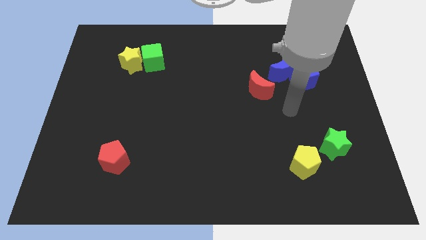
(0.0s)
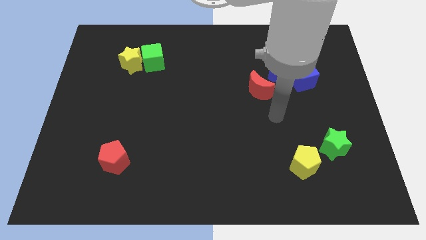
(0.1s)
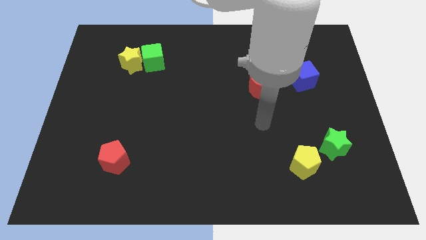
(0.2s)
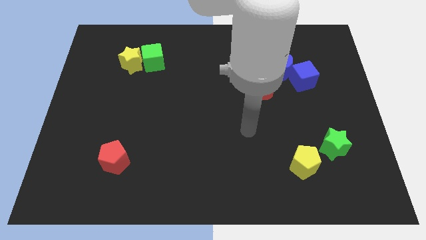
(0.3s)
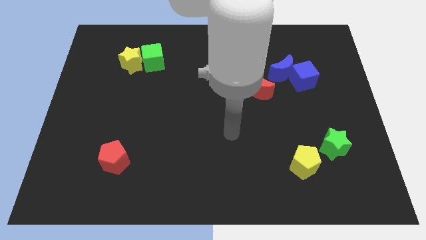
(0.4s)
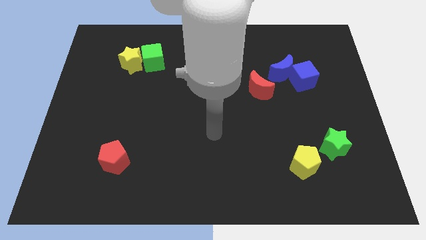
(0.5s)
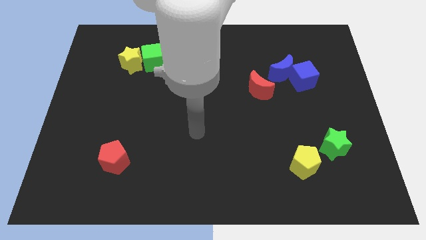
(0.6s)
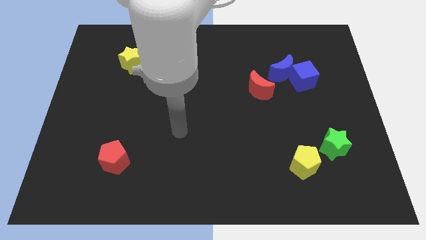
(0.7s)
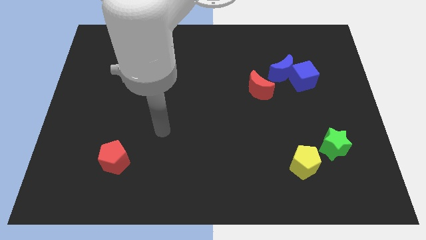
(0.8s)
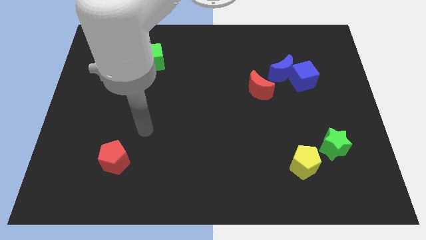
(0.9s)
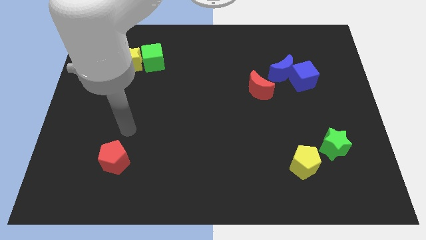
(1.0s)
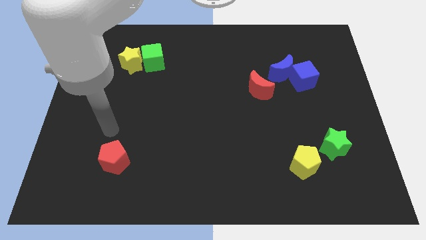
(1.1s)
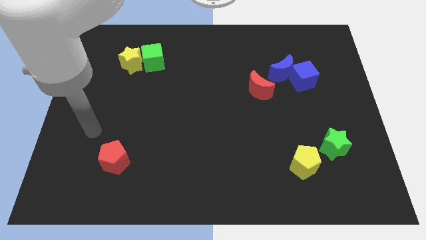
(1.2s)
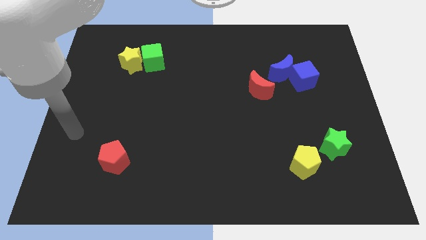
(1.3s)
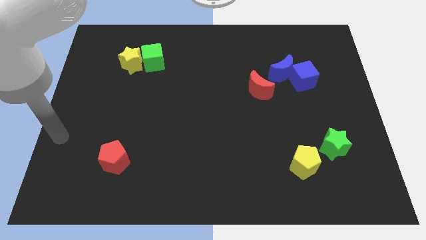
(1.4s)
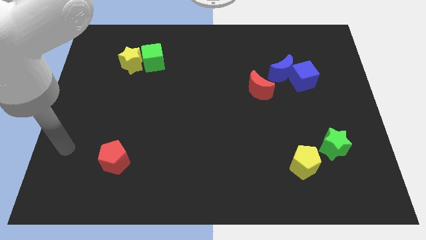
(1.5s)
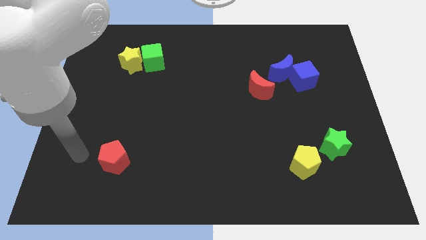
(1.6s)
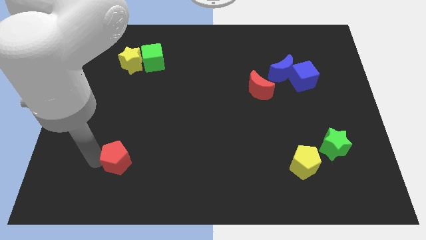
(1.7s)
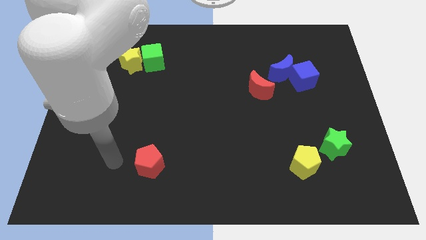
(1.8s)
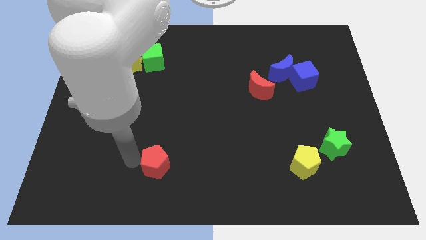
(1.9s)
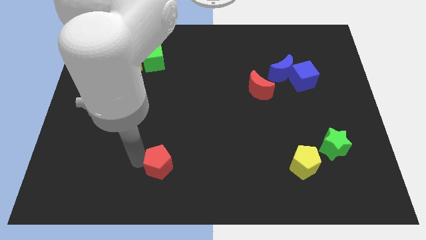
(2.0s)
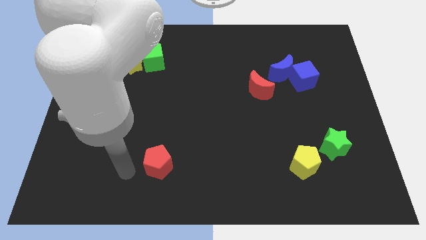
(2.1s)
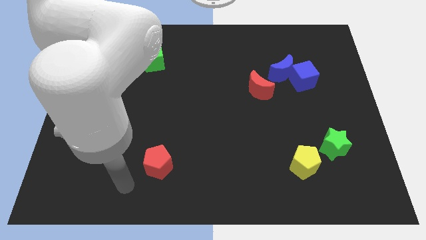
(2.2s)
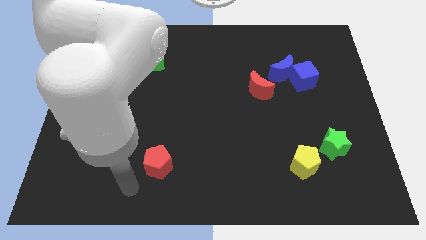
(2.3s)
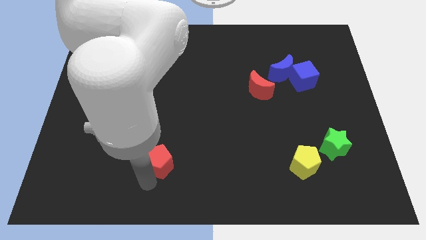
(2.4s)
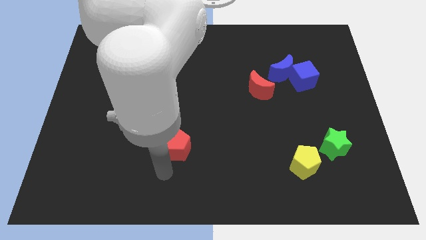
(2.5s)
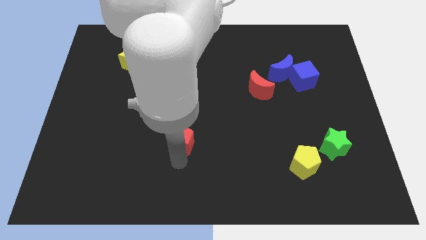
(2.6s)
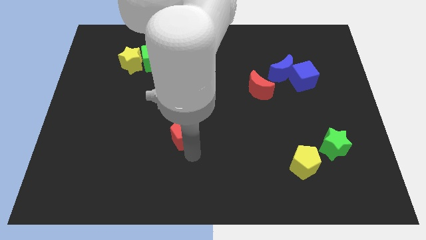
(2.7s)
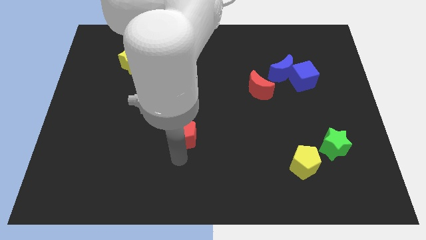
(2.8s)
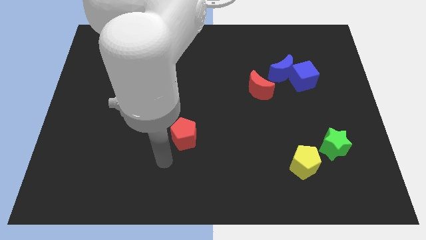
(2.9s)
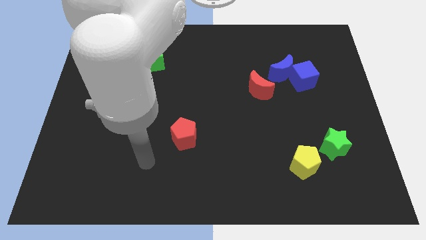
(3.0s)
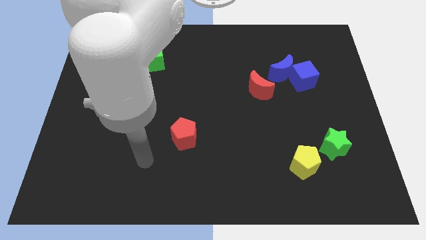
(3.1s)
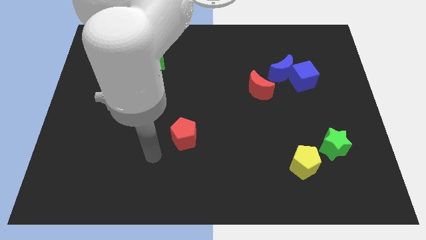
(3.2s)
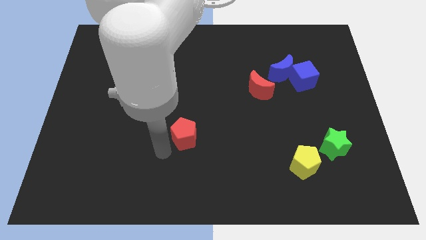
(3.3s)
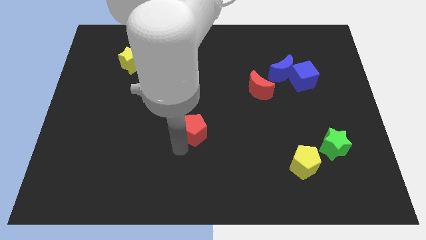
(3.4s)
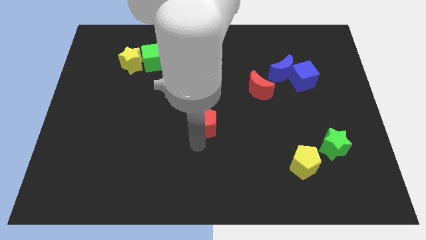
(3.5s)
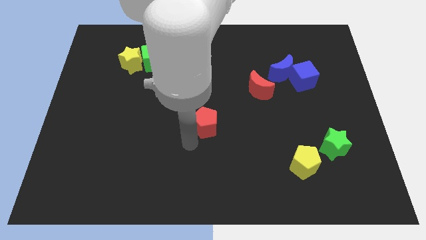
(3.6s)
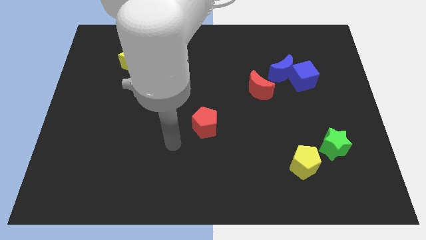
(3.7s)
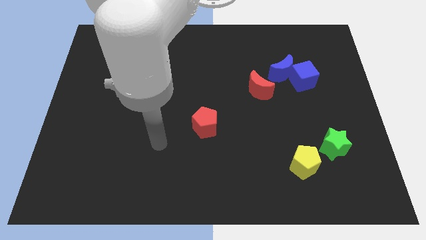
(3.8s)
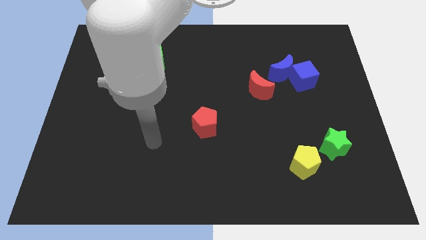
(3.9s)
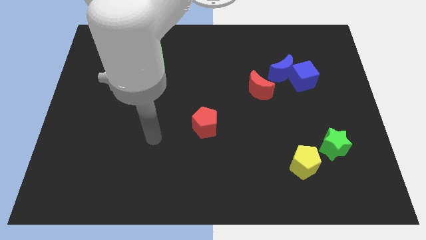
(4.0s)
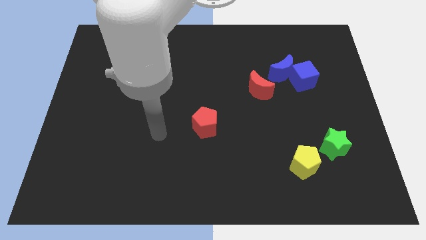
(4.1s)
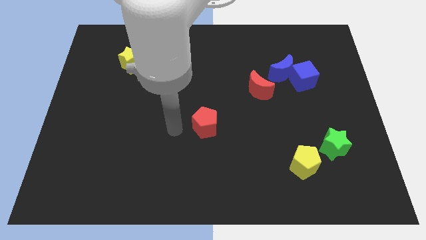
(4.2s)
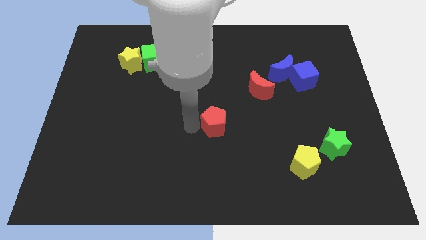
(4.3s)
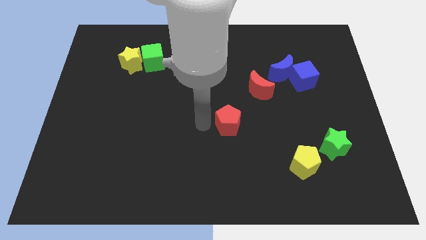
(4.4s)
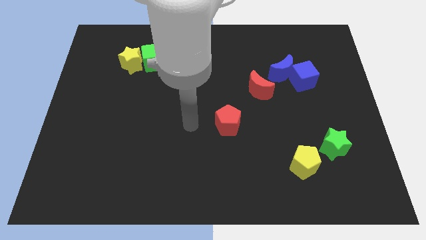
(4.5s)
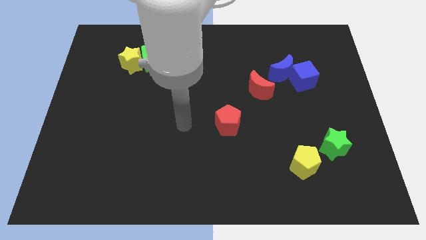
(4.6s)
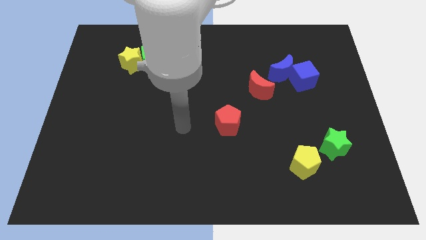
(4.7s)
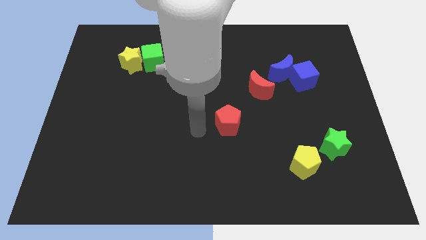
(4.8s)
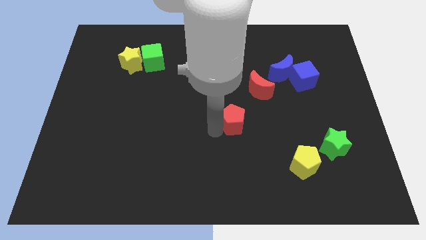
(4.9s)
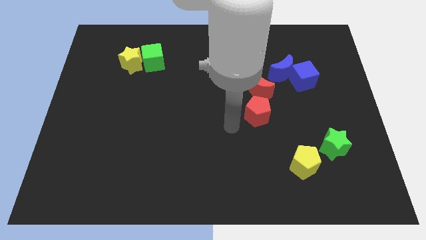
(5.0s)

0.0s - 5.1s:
move the red pentagon towards the bottom side of the red crescent

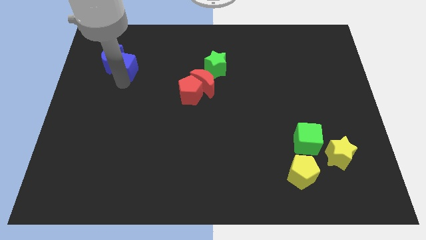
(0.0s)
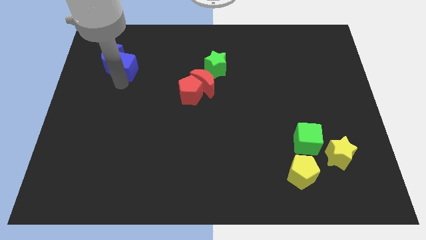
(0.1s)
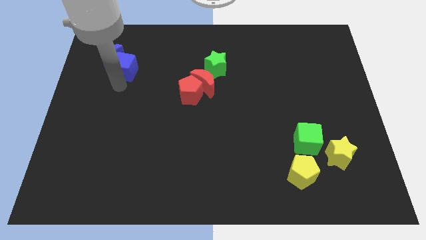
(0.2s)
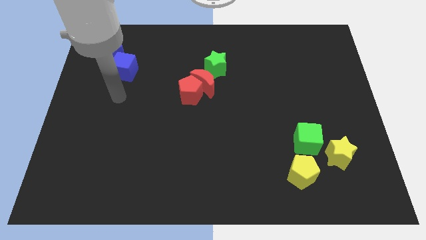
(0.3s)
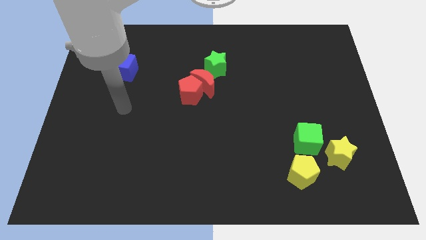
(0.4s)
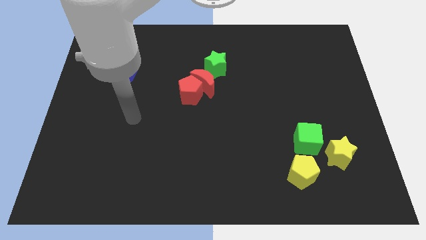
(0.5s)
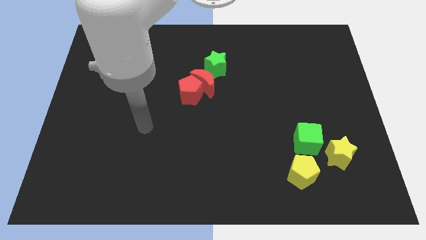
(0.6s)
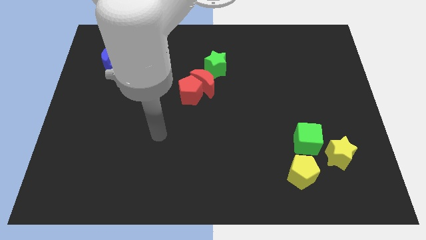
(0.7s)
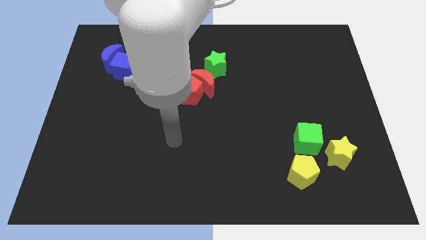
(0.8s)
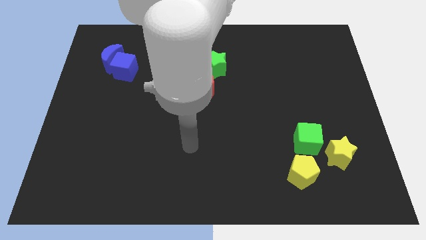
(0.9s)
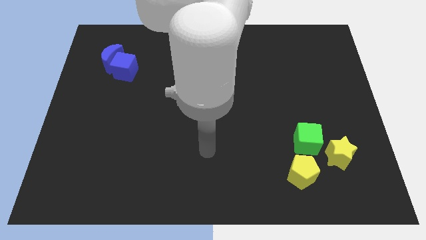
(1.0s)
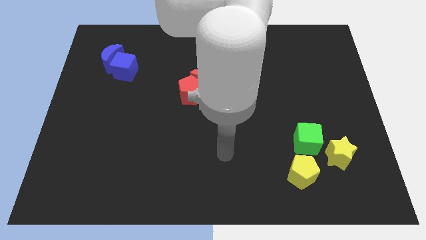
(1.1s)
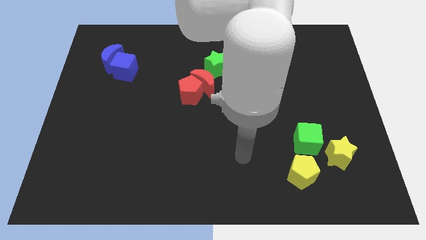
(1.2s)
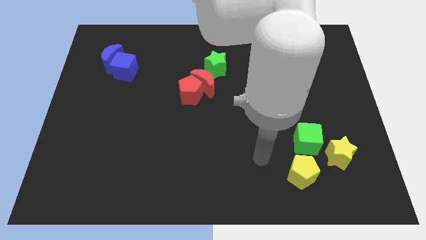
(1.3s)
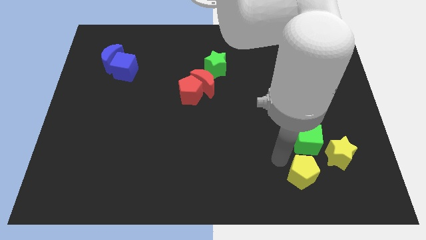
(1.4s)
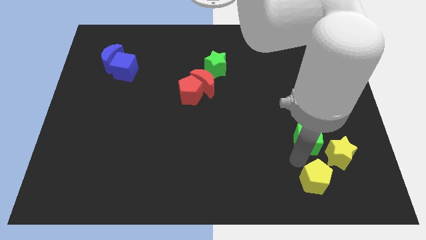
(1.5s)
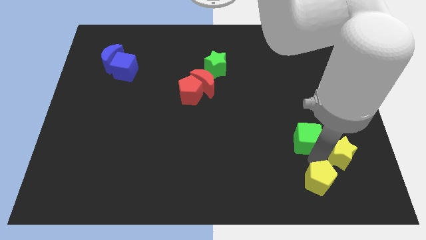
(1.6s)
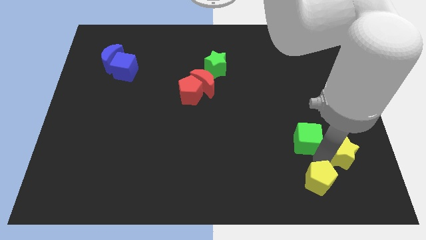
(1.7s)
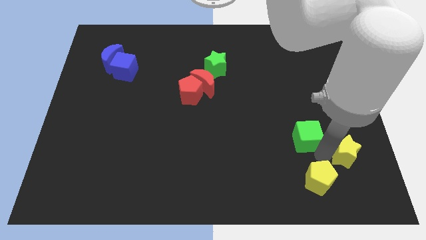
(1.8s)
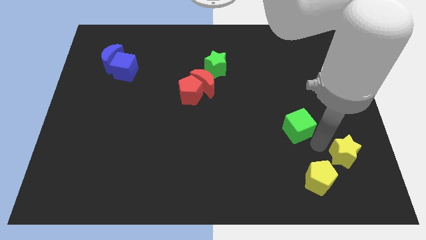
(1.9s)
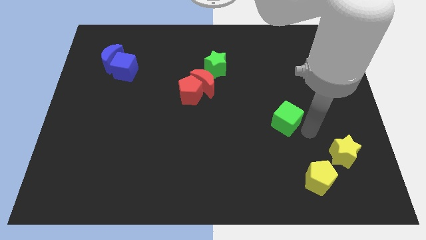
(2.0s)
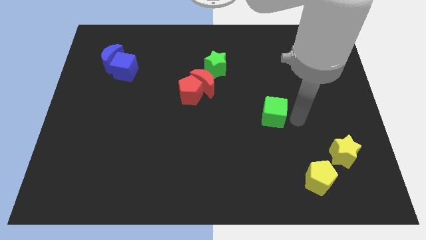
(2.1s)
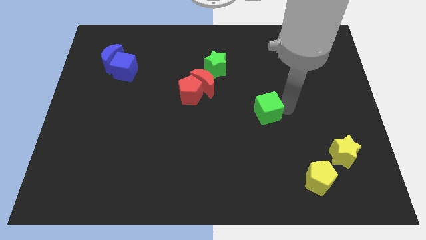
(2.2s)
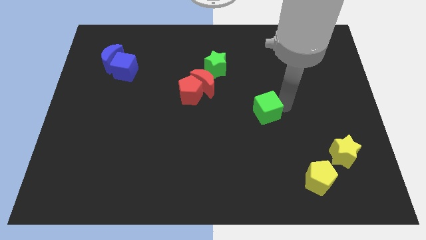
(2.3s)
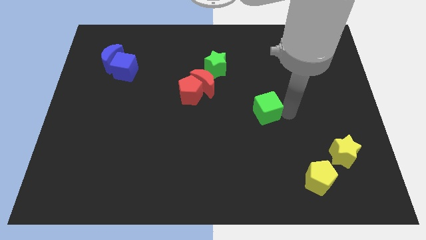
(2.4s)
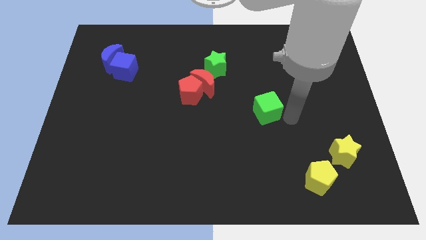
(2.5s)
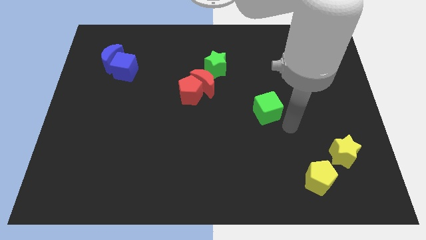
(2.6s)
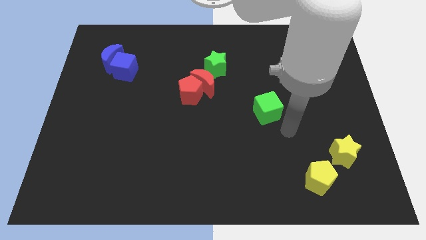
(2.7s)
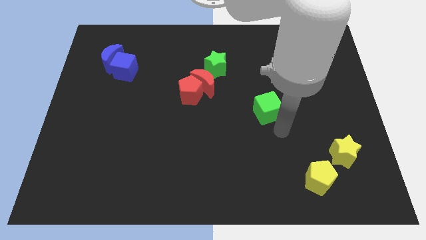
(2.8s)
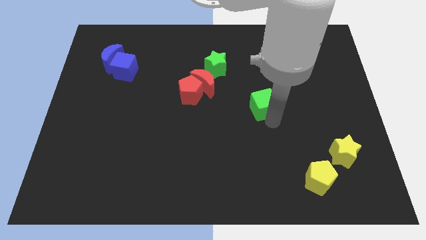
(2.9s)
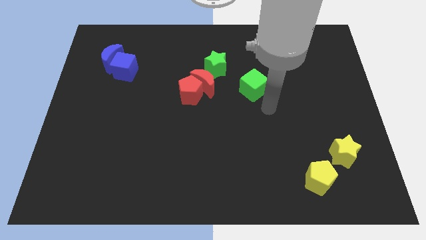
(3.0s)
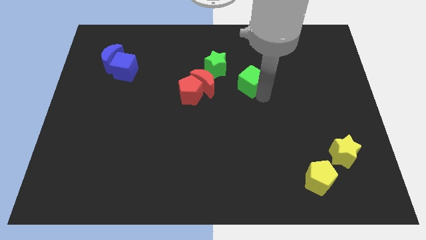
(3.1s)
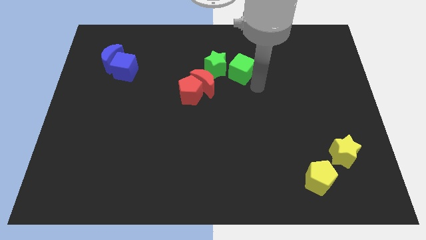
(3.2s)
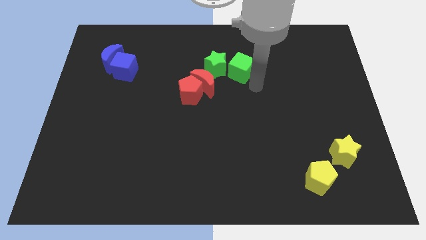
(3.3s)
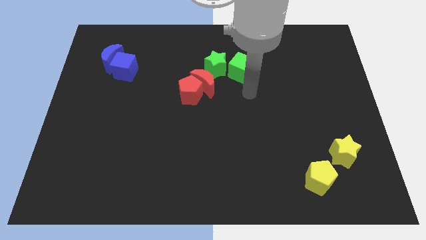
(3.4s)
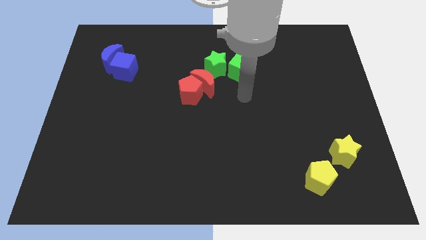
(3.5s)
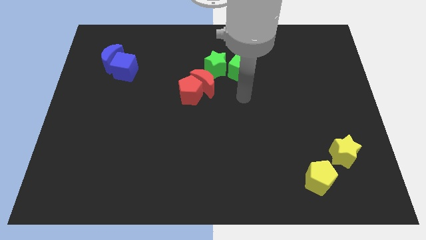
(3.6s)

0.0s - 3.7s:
slide the green cube close to the right side of the green star

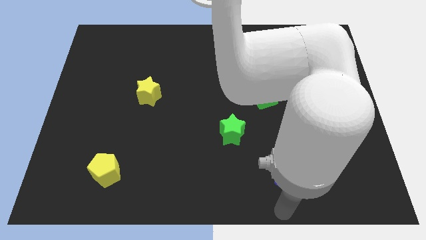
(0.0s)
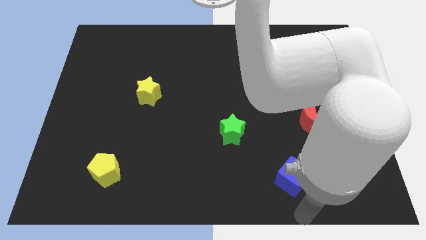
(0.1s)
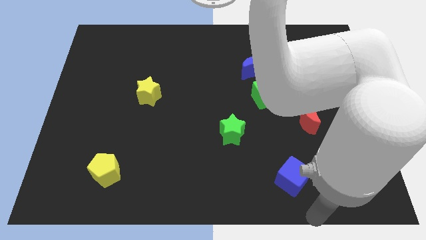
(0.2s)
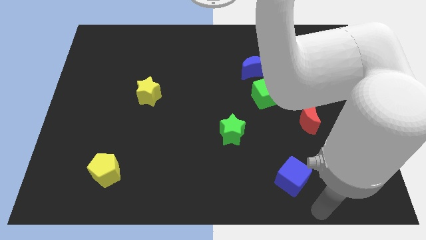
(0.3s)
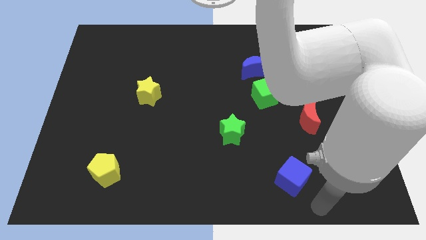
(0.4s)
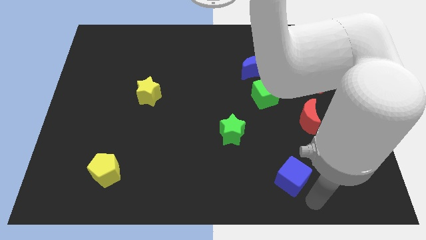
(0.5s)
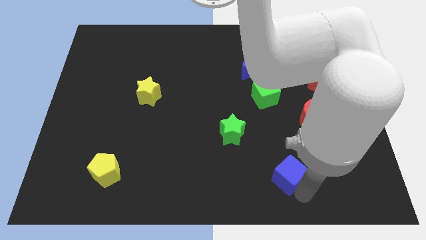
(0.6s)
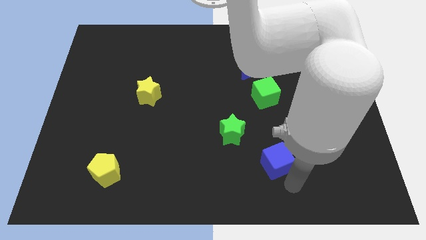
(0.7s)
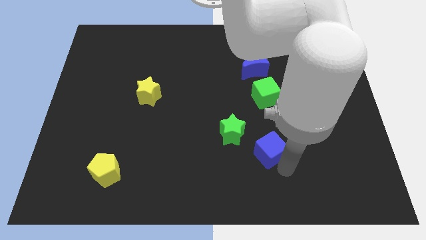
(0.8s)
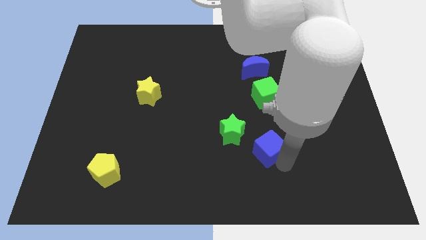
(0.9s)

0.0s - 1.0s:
push the blue cube diagonally to the bottom right of the green star
